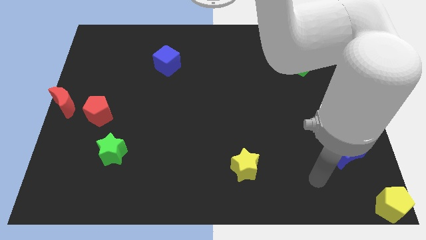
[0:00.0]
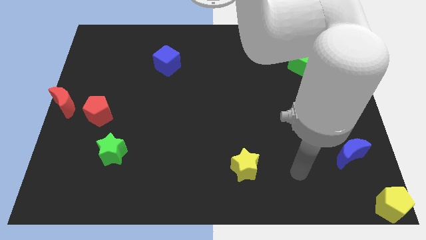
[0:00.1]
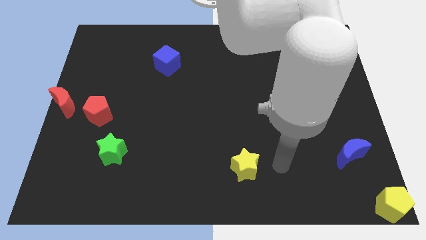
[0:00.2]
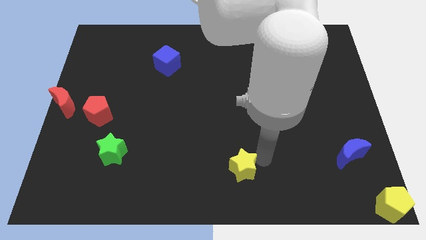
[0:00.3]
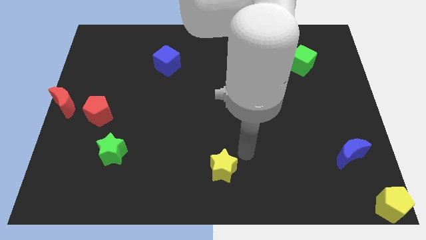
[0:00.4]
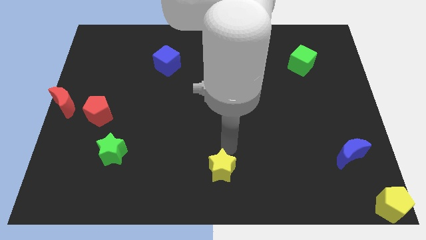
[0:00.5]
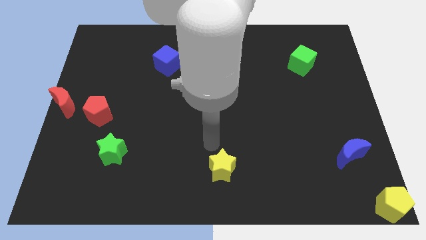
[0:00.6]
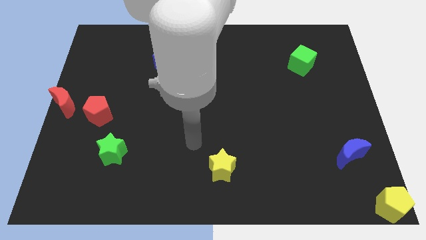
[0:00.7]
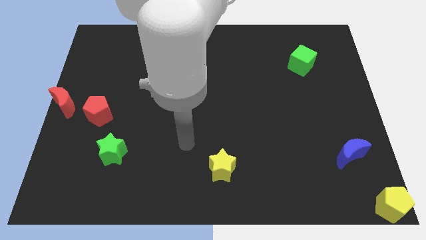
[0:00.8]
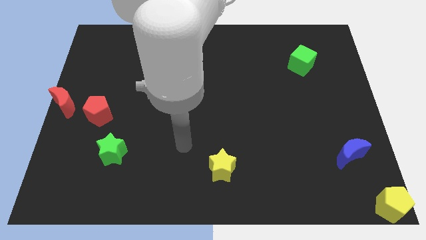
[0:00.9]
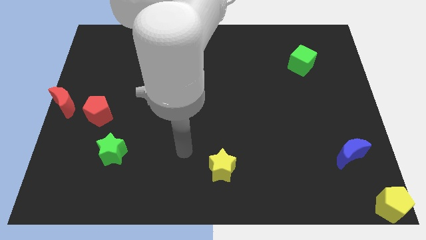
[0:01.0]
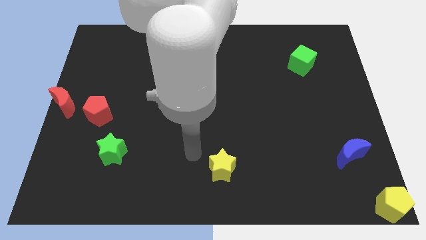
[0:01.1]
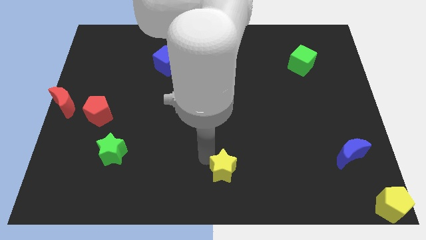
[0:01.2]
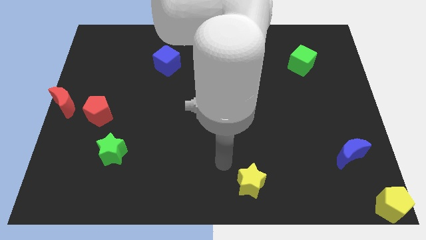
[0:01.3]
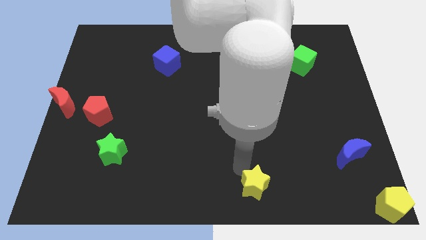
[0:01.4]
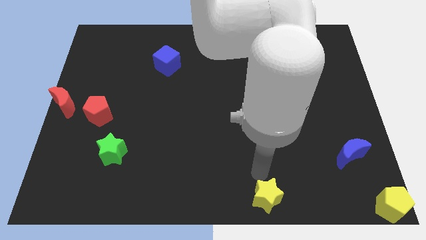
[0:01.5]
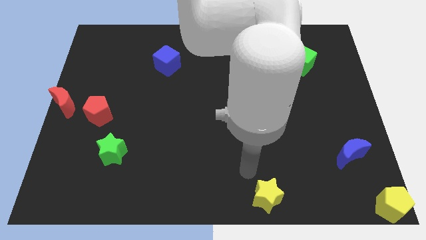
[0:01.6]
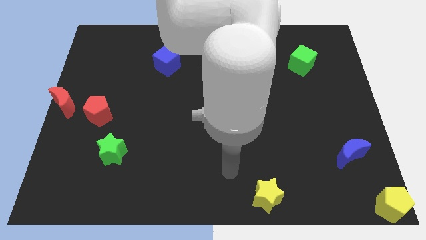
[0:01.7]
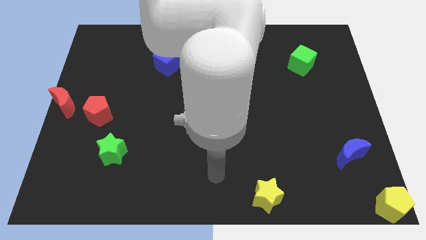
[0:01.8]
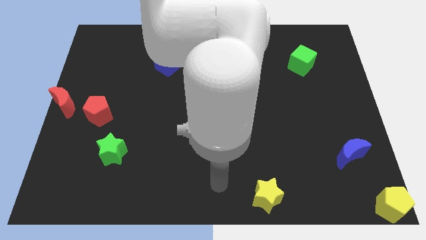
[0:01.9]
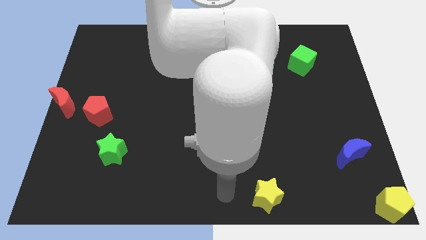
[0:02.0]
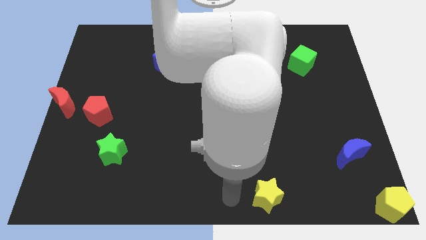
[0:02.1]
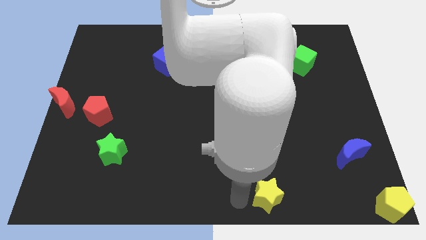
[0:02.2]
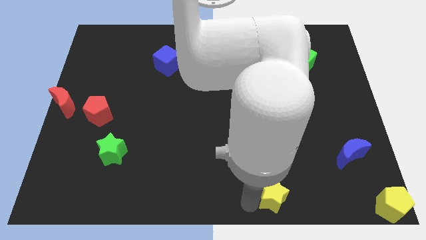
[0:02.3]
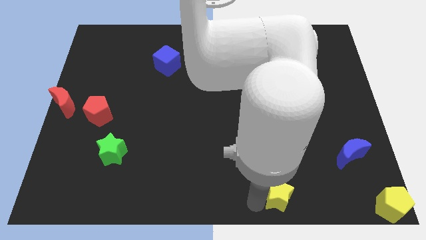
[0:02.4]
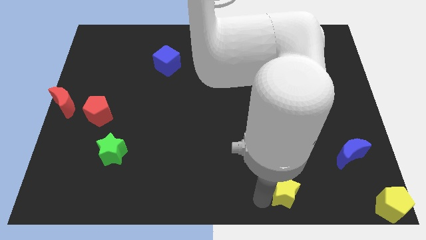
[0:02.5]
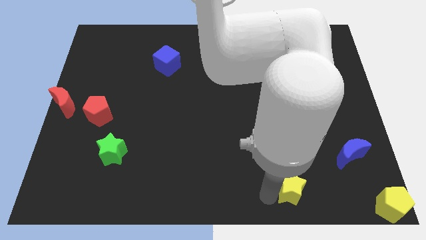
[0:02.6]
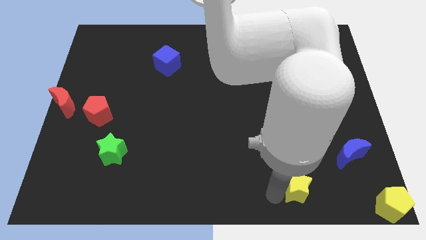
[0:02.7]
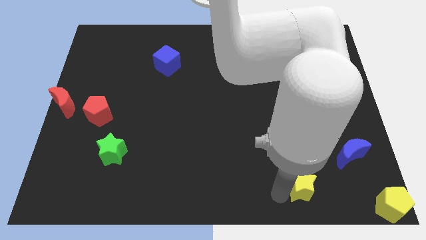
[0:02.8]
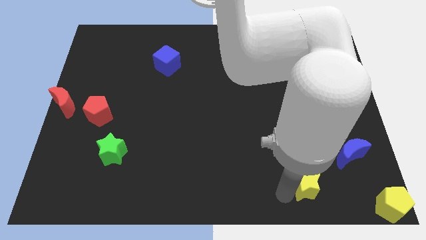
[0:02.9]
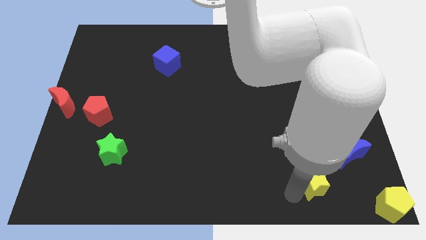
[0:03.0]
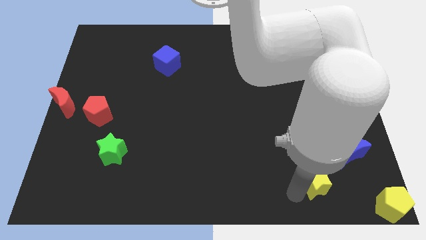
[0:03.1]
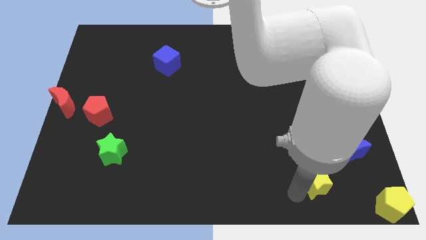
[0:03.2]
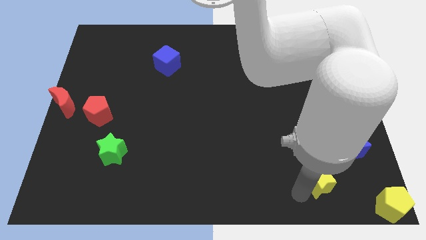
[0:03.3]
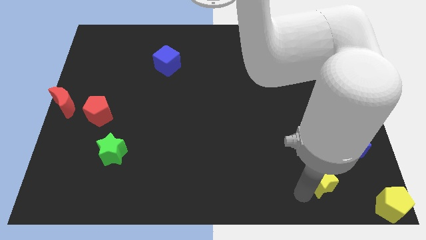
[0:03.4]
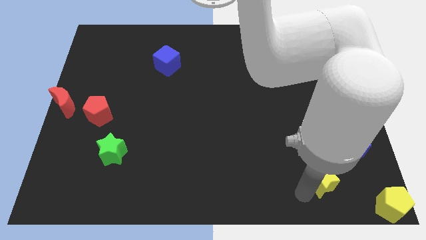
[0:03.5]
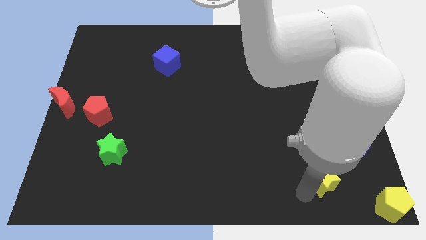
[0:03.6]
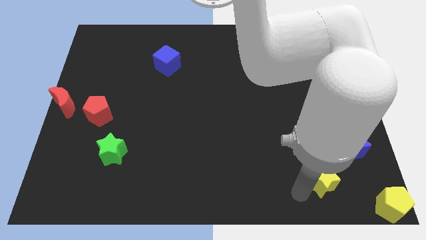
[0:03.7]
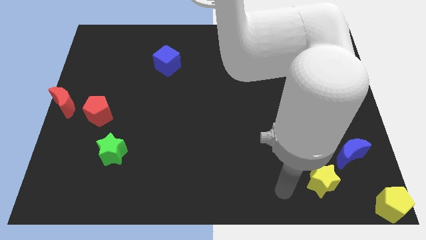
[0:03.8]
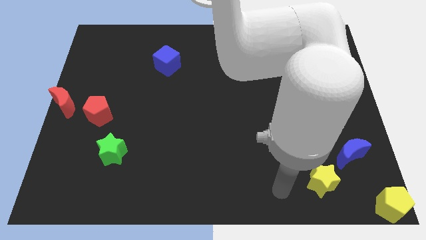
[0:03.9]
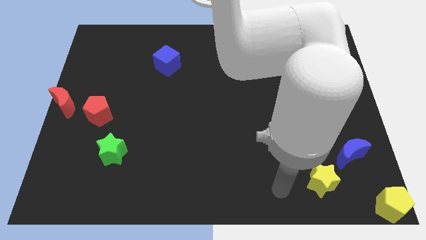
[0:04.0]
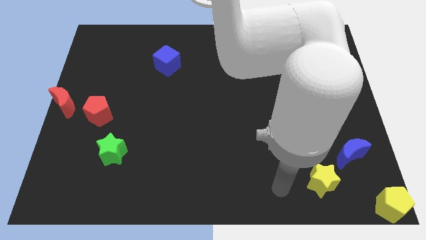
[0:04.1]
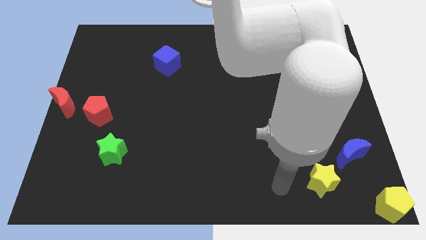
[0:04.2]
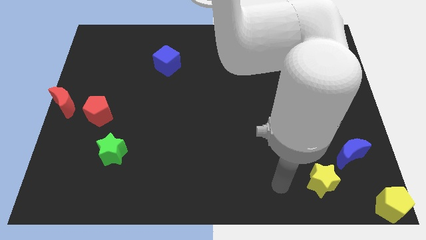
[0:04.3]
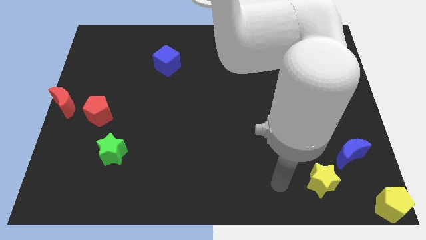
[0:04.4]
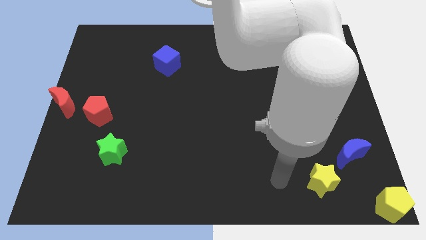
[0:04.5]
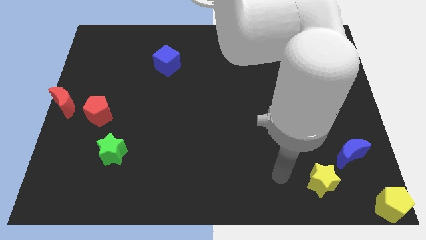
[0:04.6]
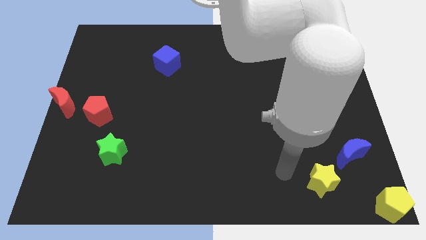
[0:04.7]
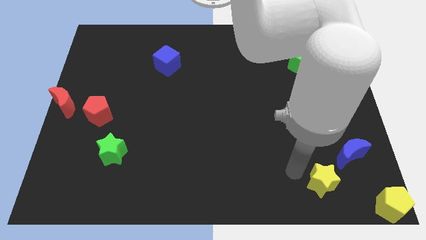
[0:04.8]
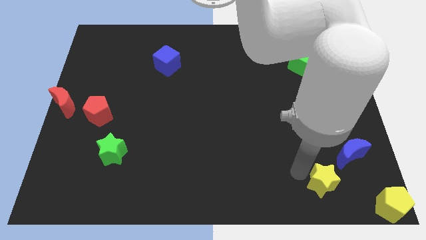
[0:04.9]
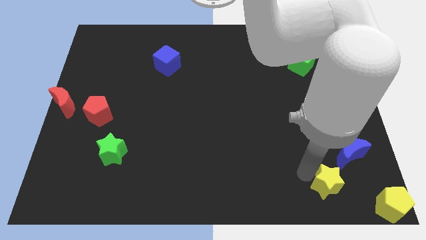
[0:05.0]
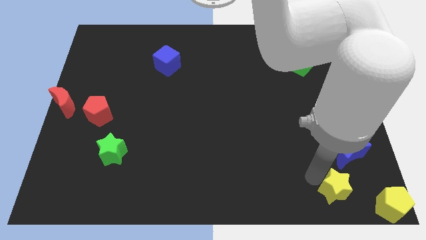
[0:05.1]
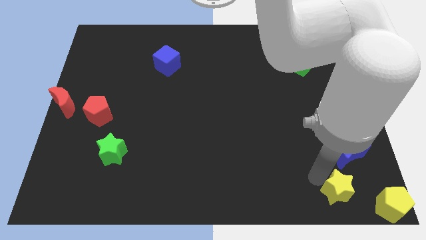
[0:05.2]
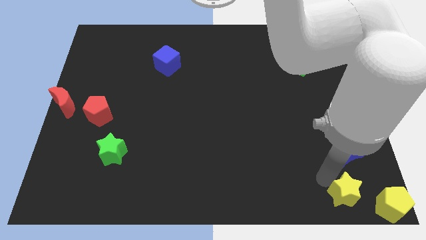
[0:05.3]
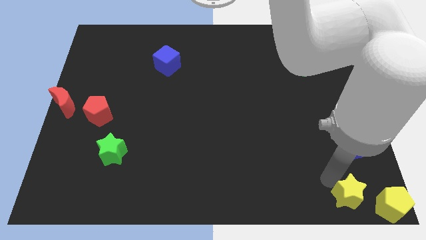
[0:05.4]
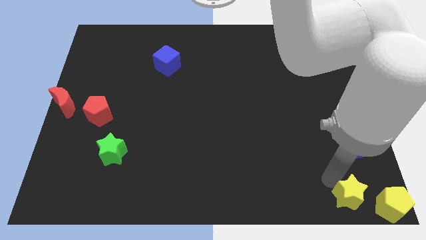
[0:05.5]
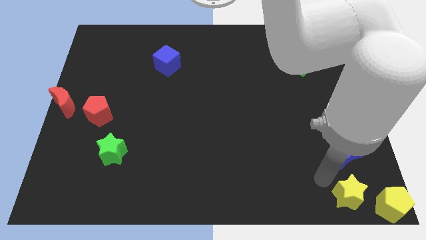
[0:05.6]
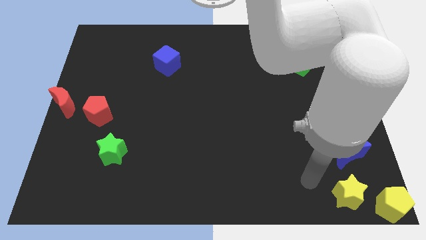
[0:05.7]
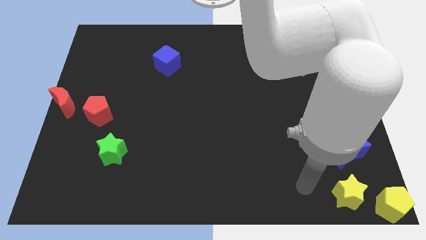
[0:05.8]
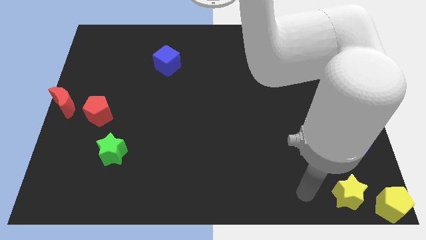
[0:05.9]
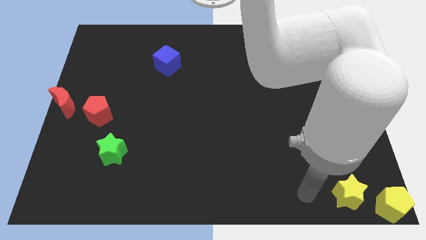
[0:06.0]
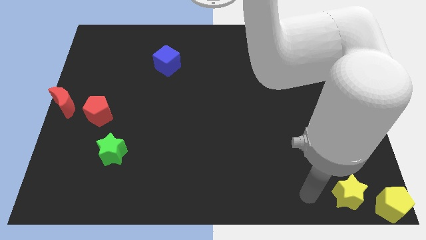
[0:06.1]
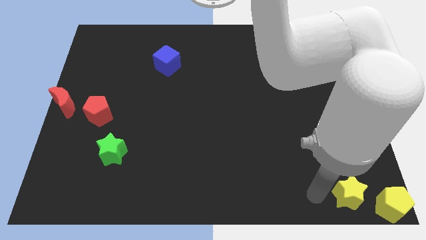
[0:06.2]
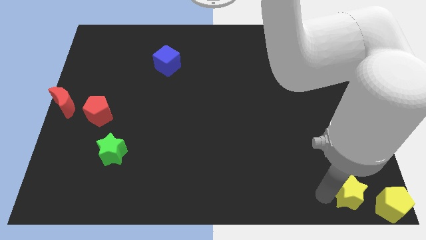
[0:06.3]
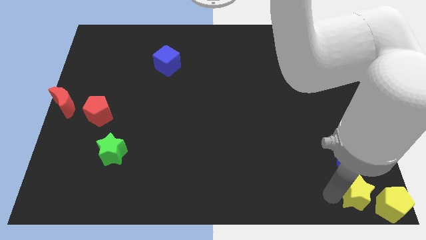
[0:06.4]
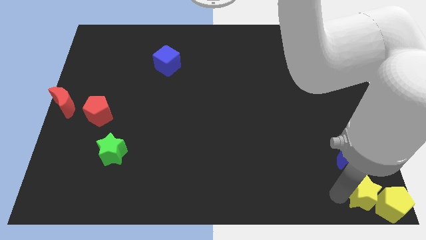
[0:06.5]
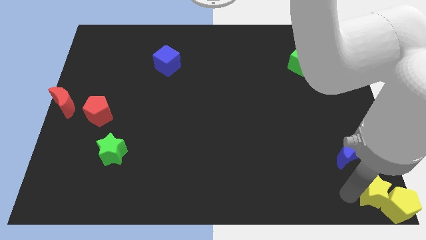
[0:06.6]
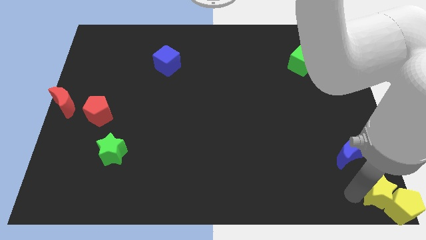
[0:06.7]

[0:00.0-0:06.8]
push yellow star into the yellow pentagon

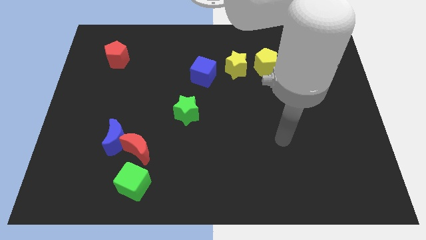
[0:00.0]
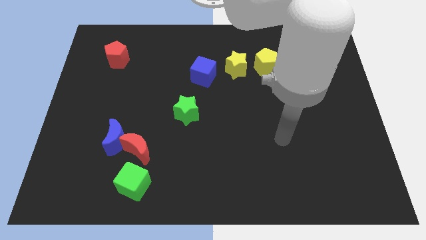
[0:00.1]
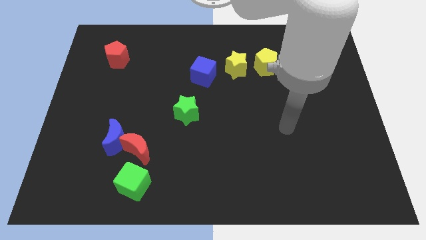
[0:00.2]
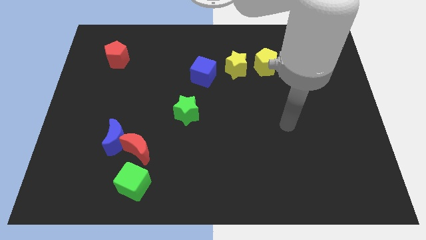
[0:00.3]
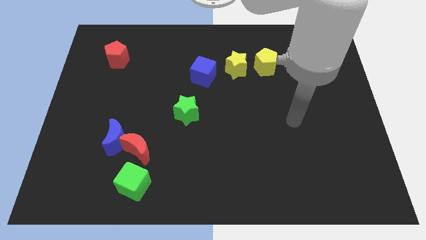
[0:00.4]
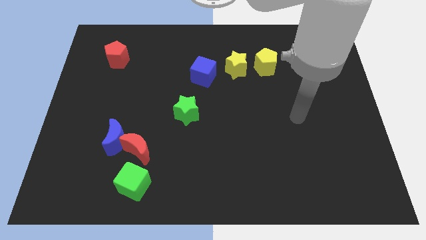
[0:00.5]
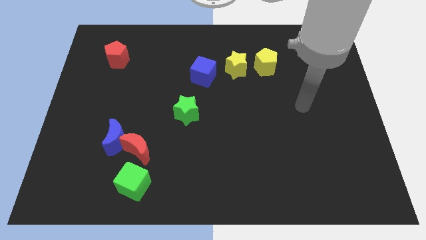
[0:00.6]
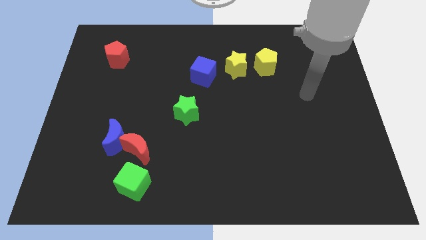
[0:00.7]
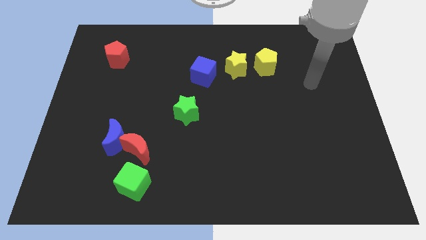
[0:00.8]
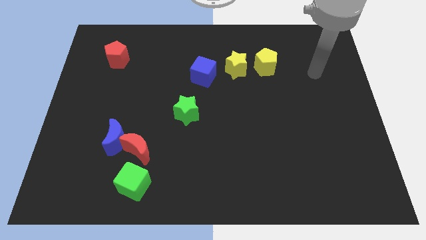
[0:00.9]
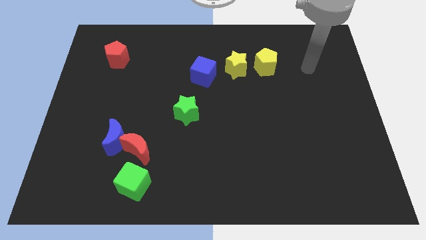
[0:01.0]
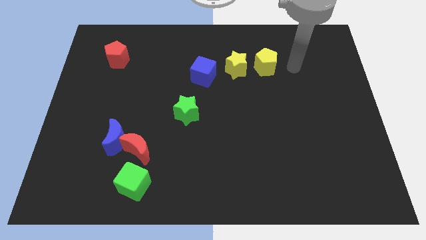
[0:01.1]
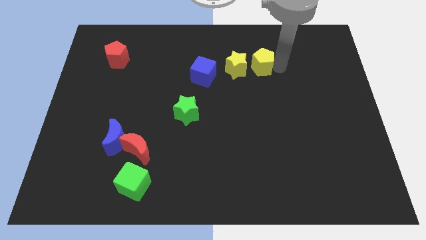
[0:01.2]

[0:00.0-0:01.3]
point your arm at the right side of the yellow pentagon

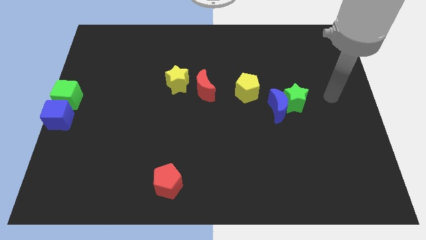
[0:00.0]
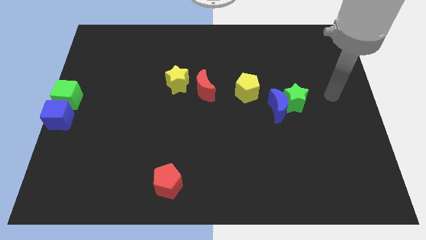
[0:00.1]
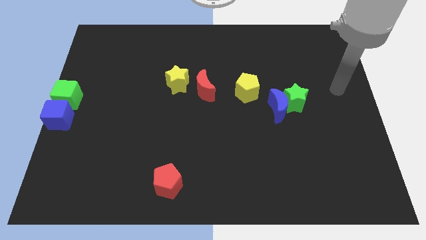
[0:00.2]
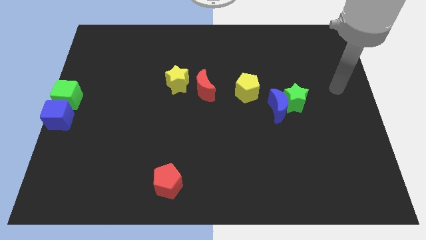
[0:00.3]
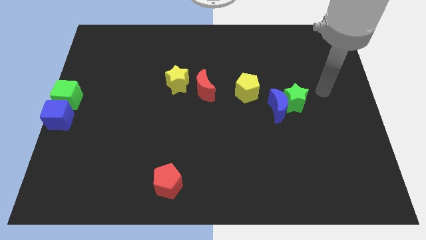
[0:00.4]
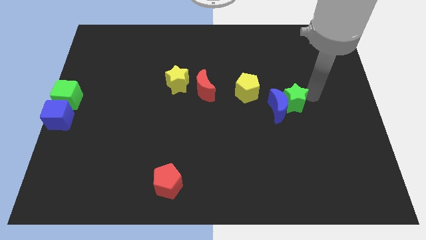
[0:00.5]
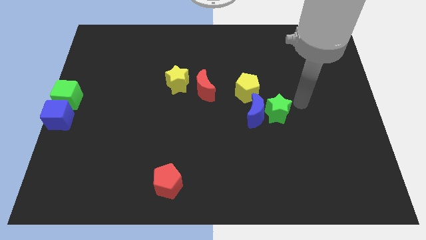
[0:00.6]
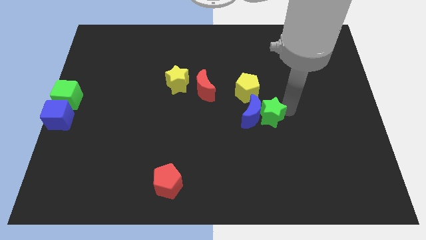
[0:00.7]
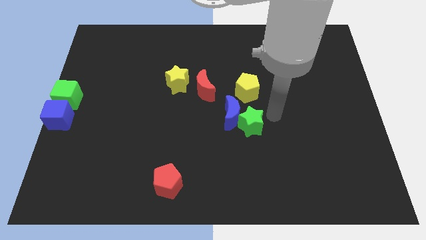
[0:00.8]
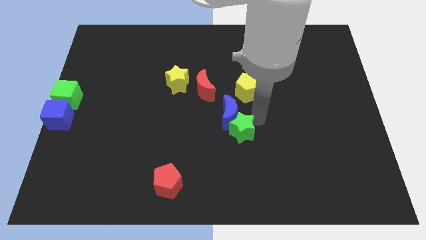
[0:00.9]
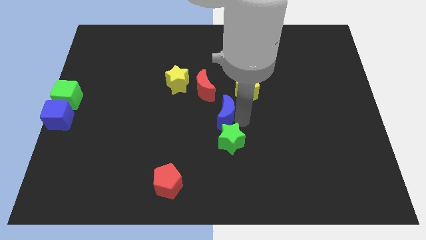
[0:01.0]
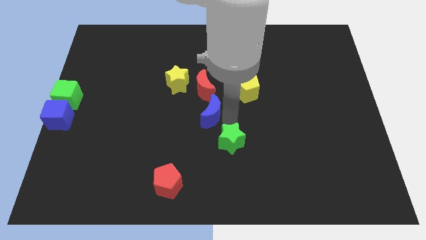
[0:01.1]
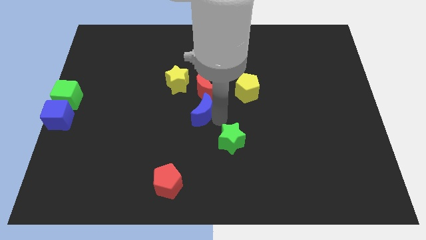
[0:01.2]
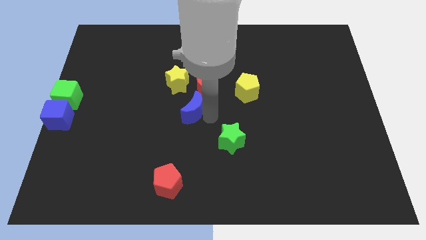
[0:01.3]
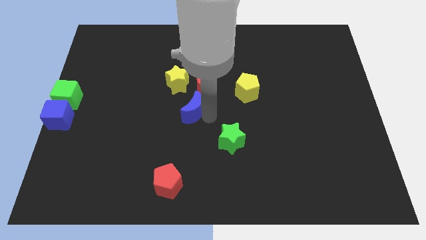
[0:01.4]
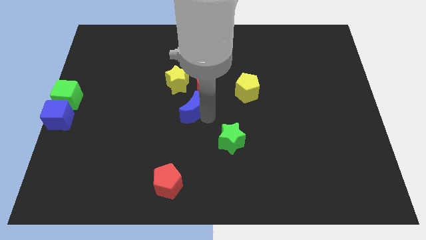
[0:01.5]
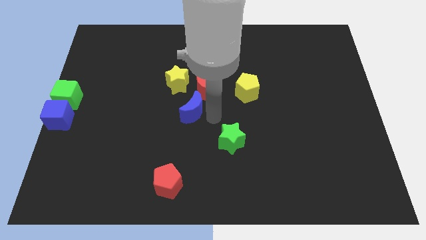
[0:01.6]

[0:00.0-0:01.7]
separate the green star and blue crescent
